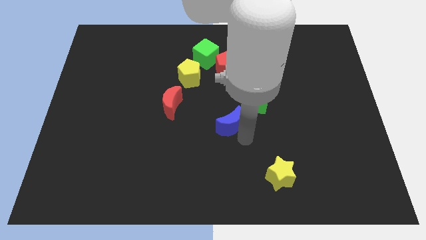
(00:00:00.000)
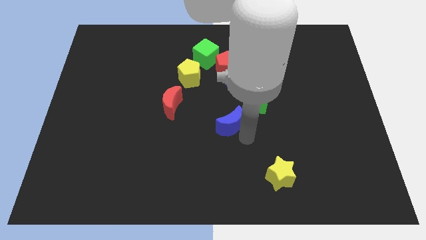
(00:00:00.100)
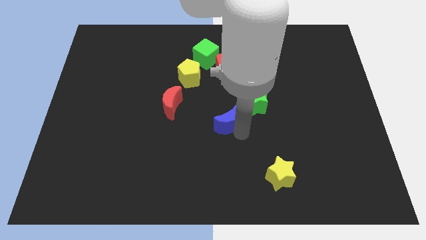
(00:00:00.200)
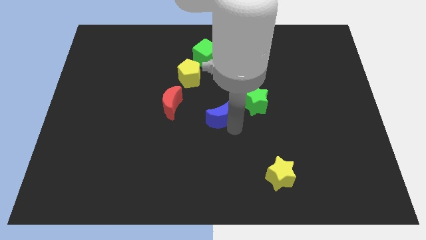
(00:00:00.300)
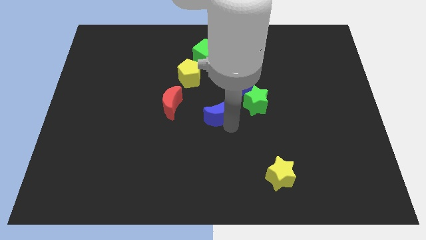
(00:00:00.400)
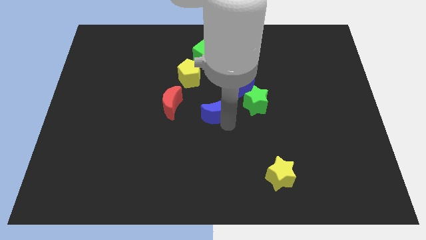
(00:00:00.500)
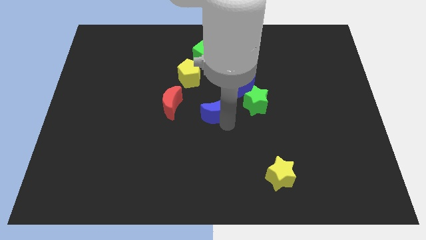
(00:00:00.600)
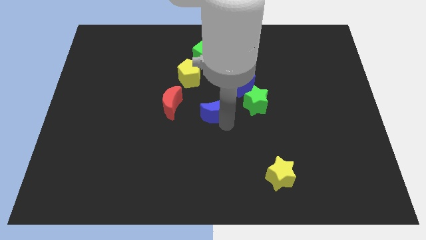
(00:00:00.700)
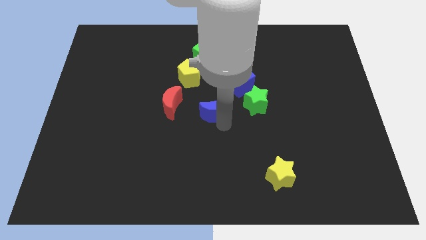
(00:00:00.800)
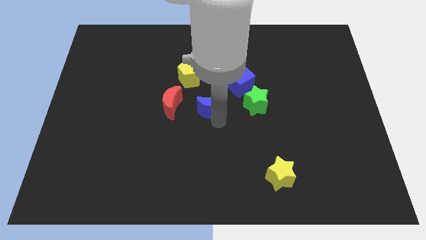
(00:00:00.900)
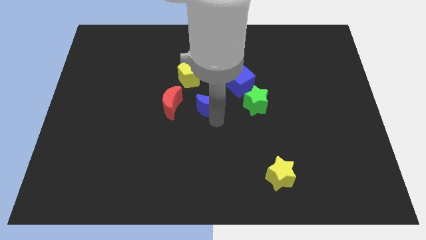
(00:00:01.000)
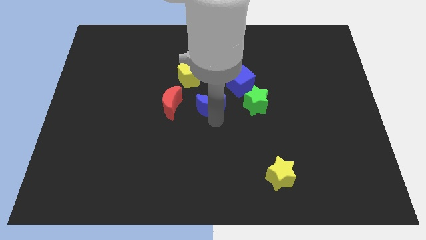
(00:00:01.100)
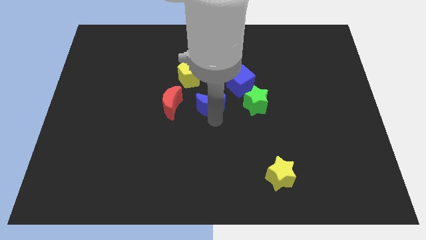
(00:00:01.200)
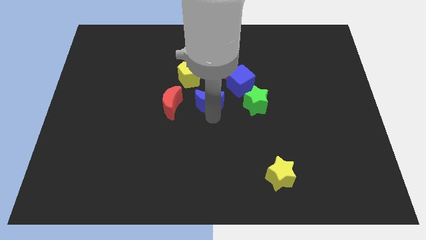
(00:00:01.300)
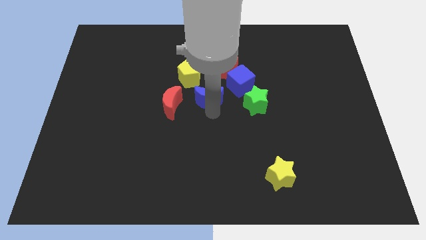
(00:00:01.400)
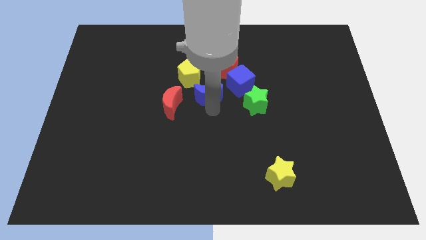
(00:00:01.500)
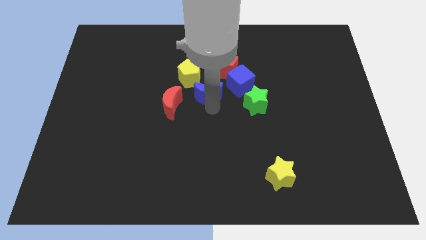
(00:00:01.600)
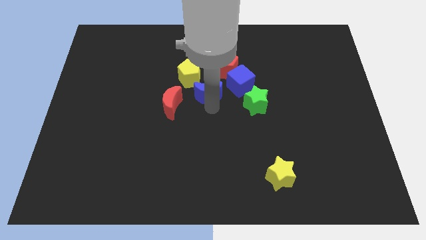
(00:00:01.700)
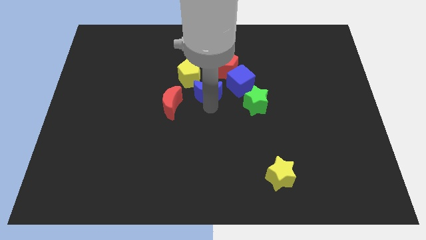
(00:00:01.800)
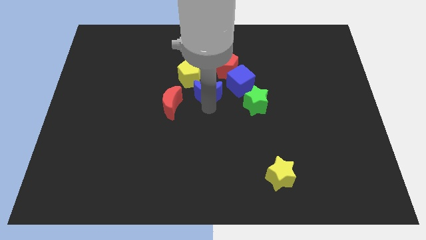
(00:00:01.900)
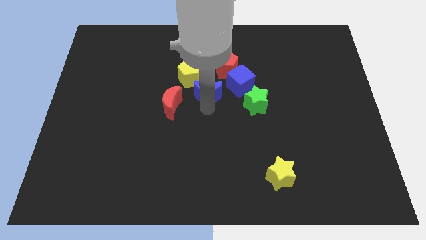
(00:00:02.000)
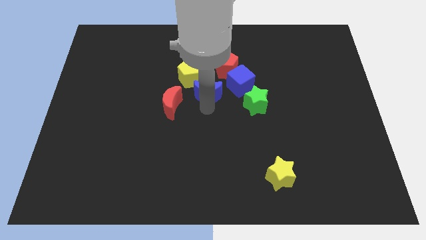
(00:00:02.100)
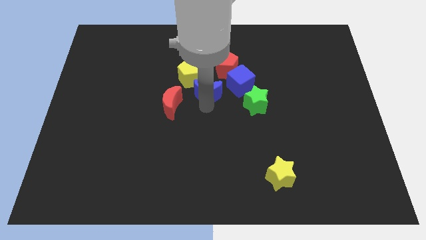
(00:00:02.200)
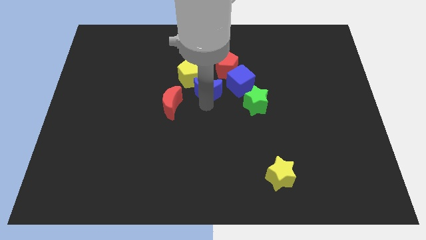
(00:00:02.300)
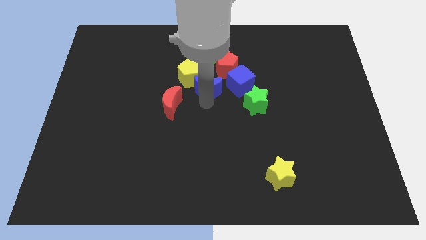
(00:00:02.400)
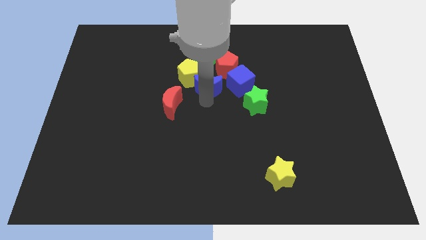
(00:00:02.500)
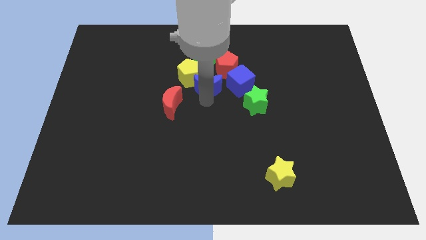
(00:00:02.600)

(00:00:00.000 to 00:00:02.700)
move the blue moon left to the blue cube

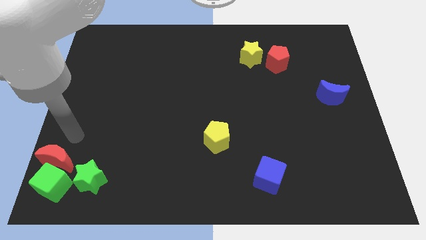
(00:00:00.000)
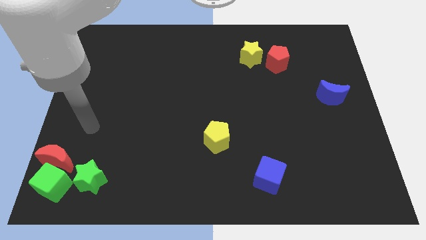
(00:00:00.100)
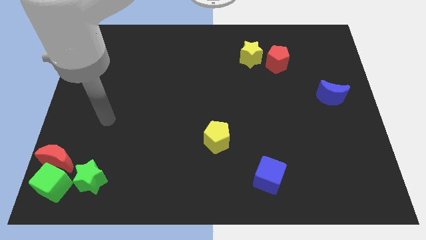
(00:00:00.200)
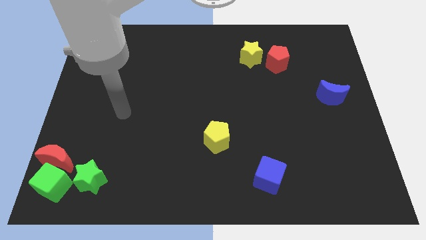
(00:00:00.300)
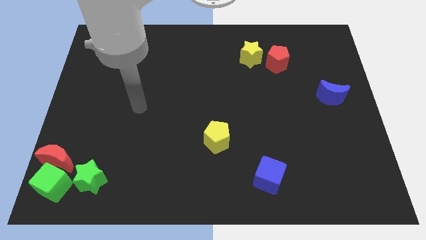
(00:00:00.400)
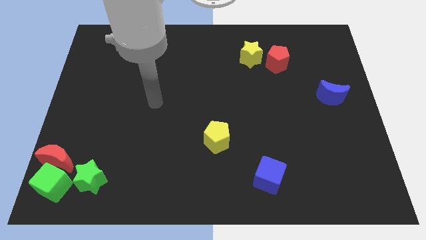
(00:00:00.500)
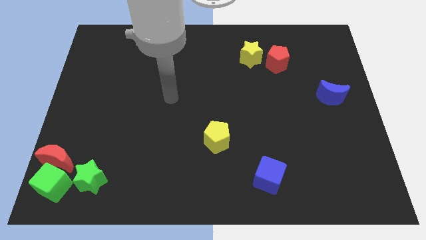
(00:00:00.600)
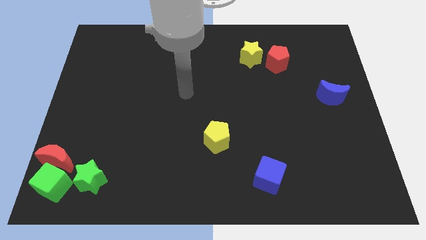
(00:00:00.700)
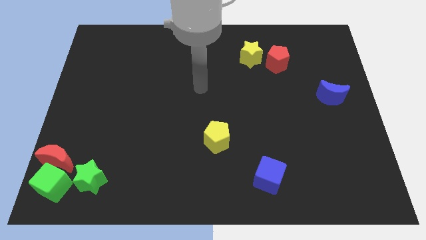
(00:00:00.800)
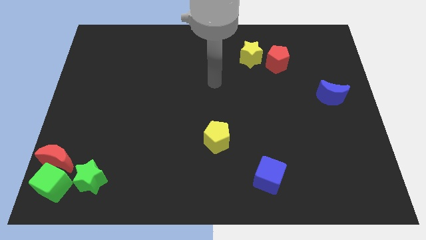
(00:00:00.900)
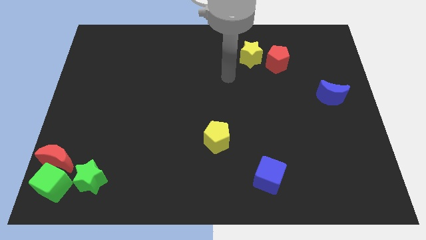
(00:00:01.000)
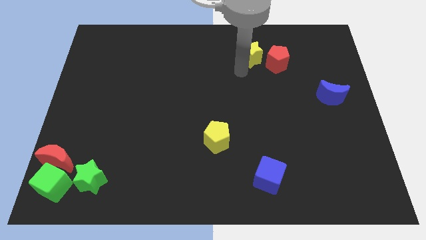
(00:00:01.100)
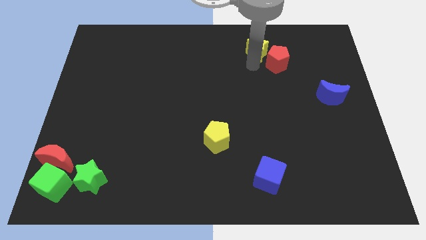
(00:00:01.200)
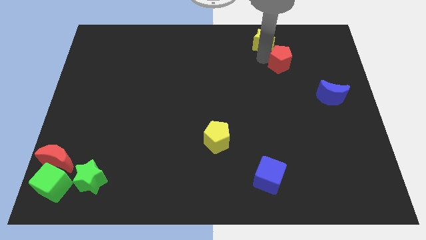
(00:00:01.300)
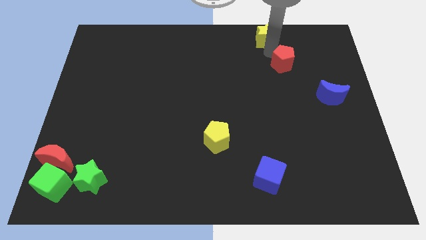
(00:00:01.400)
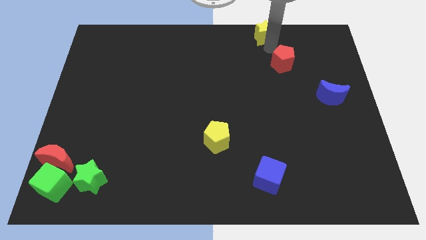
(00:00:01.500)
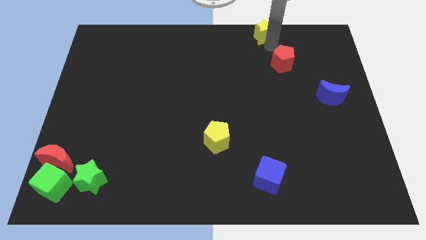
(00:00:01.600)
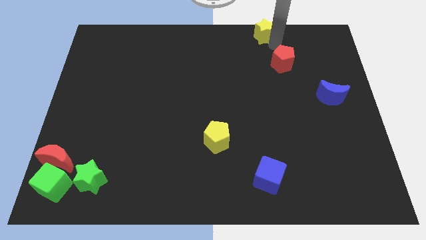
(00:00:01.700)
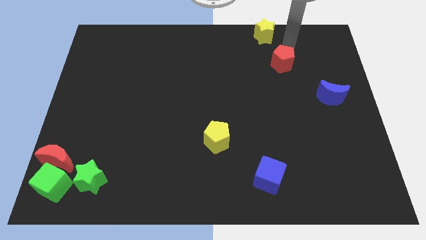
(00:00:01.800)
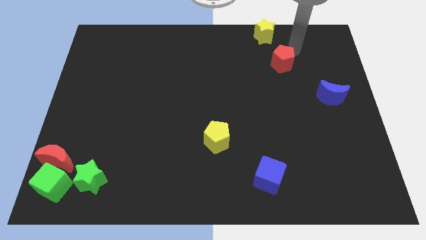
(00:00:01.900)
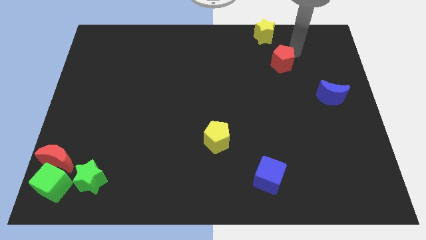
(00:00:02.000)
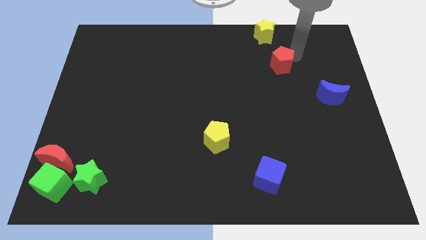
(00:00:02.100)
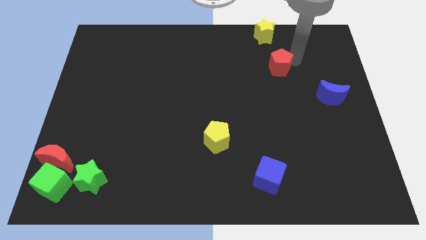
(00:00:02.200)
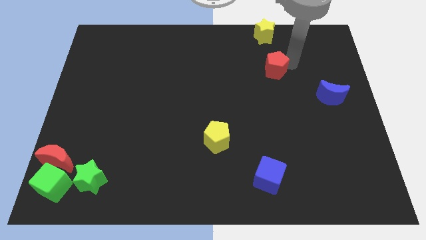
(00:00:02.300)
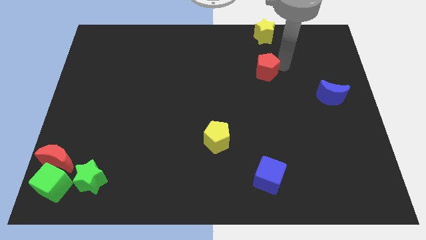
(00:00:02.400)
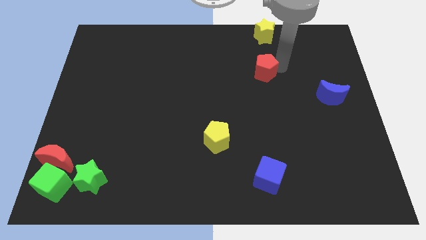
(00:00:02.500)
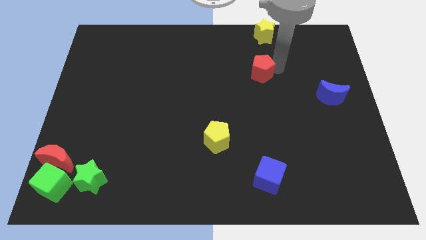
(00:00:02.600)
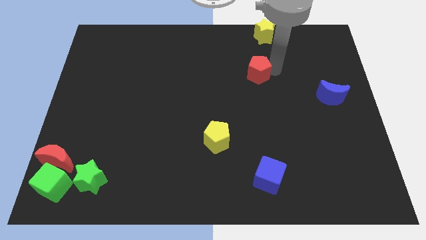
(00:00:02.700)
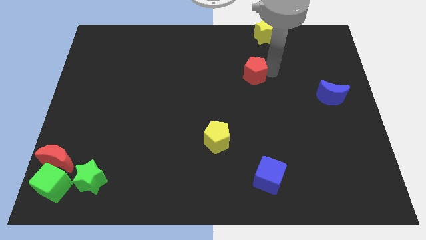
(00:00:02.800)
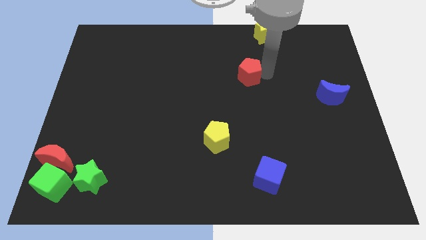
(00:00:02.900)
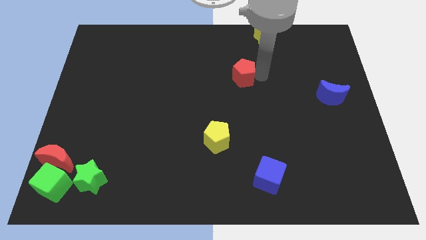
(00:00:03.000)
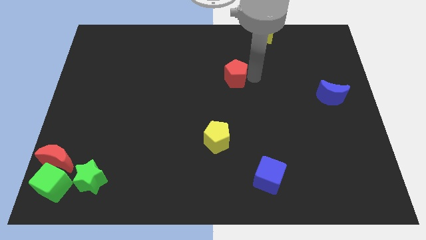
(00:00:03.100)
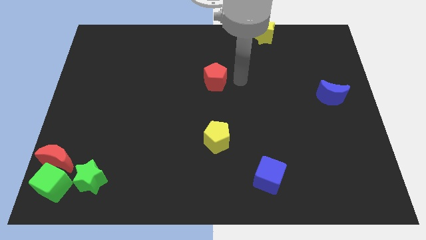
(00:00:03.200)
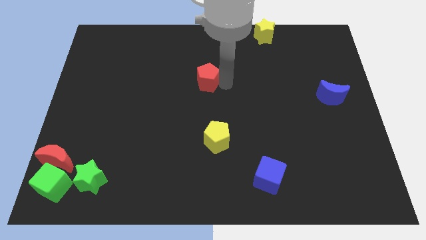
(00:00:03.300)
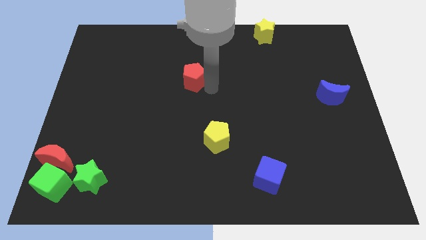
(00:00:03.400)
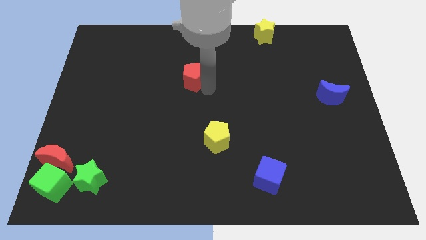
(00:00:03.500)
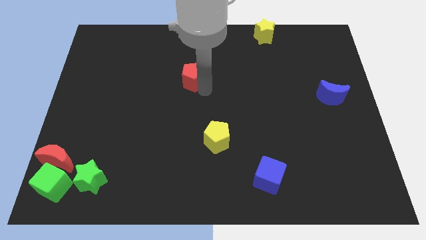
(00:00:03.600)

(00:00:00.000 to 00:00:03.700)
separate the red pentagon from the yellow star

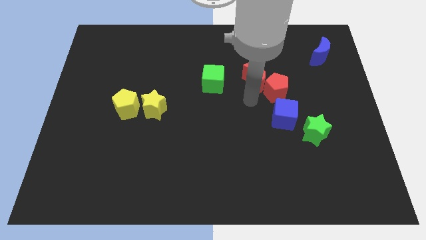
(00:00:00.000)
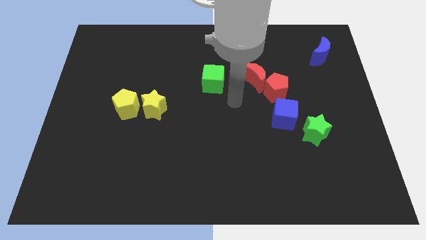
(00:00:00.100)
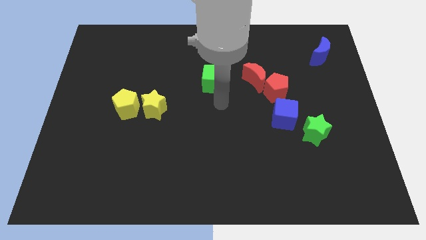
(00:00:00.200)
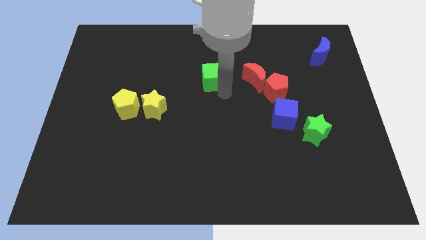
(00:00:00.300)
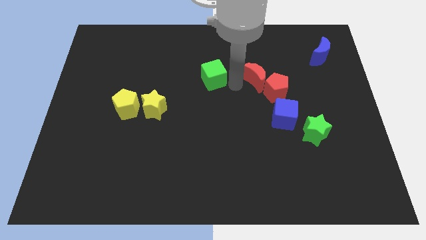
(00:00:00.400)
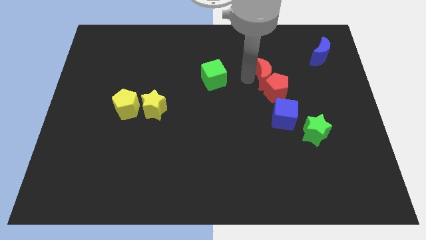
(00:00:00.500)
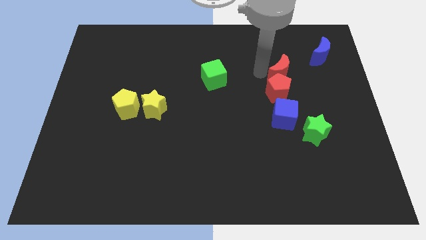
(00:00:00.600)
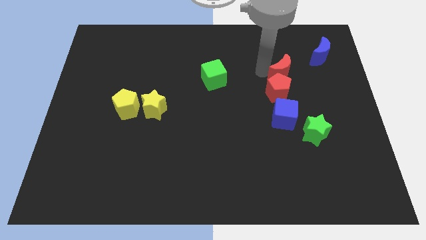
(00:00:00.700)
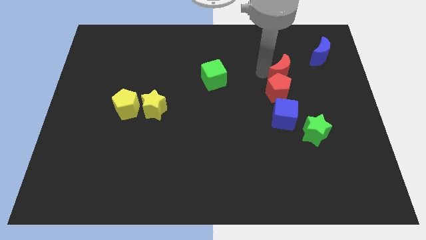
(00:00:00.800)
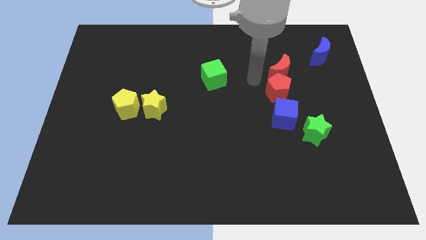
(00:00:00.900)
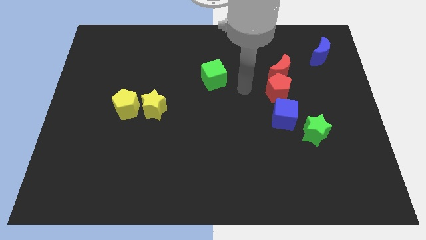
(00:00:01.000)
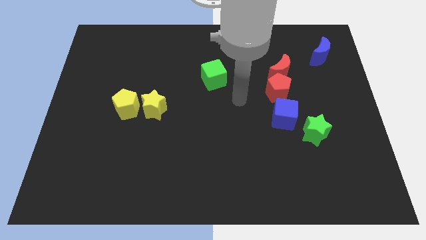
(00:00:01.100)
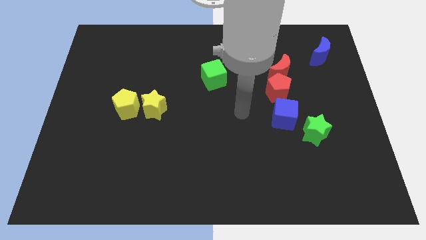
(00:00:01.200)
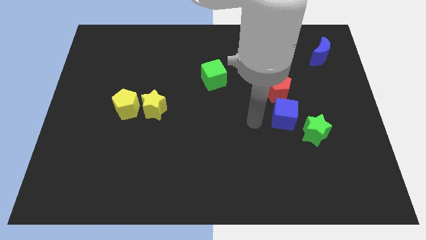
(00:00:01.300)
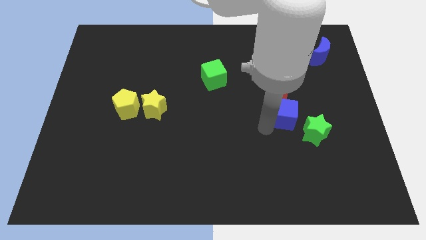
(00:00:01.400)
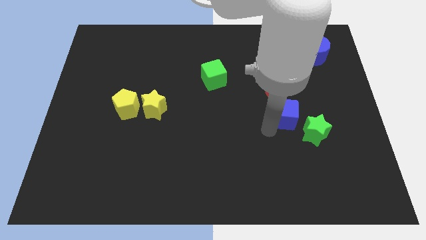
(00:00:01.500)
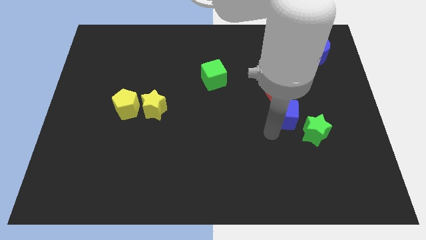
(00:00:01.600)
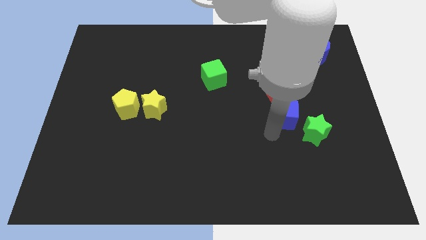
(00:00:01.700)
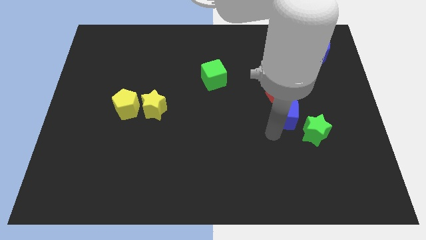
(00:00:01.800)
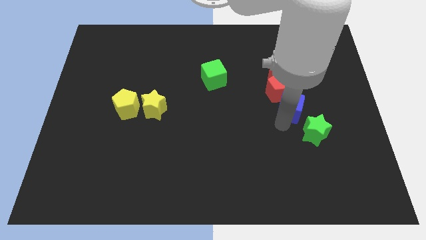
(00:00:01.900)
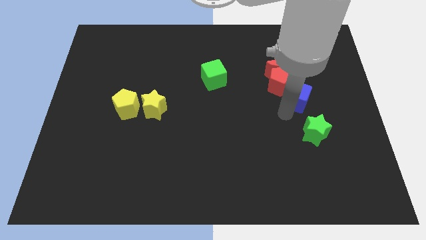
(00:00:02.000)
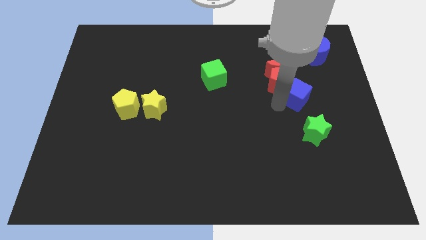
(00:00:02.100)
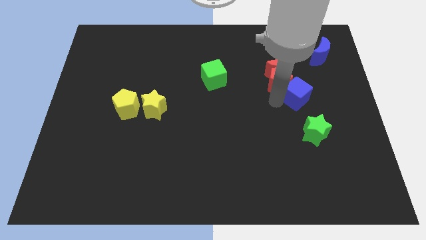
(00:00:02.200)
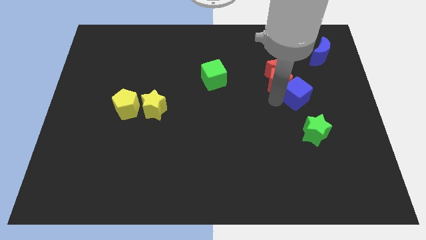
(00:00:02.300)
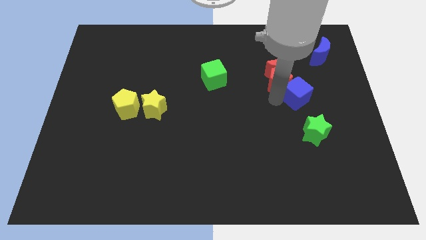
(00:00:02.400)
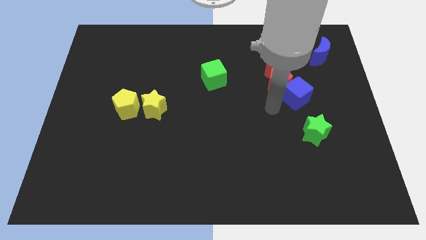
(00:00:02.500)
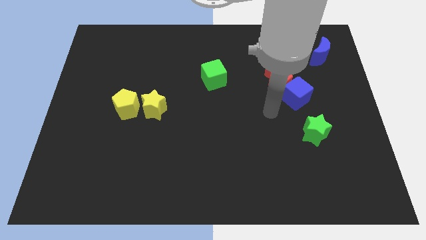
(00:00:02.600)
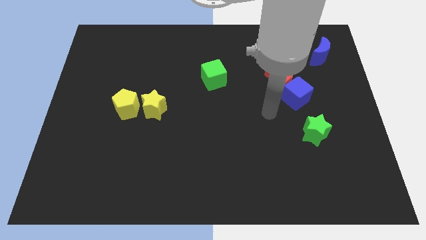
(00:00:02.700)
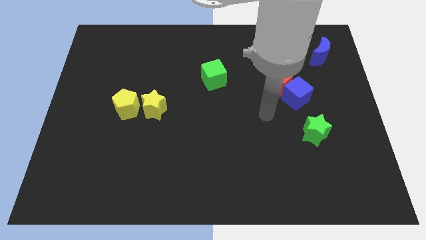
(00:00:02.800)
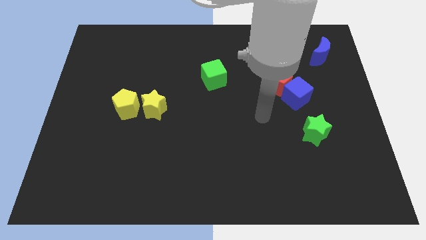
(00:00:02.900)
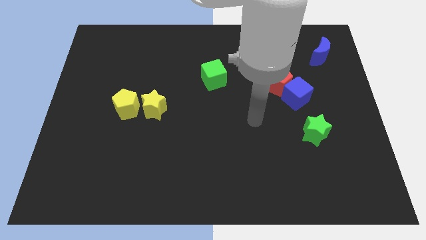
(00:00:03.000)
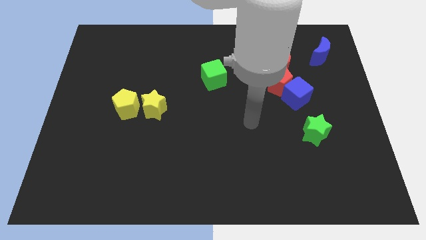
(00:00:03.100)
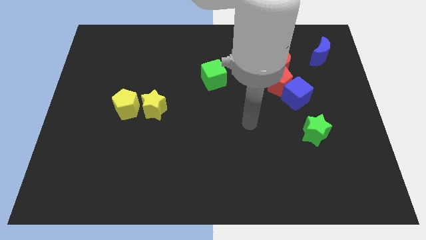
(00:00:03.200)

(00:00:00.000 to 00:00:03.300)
move both the red blocks and blue cube to the bottom left side of the blue crescent
